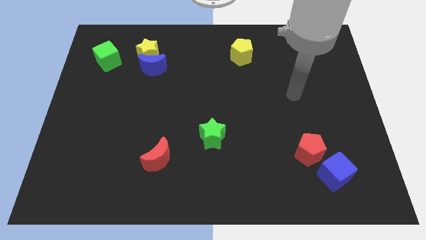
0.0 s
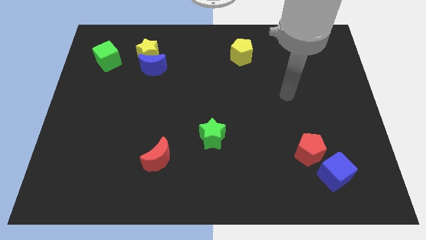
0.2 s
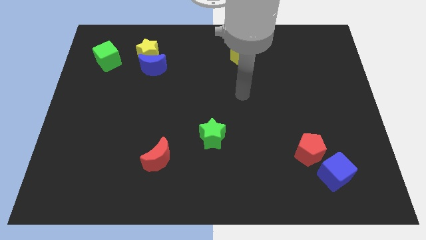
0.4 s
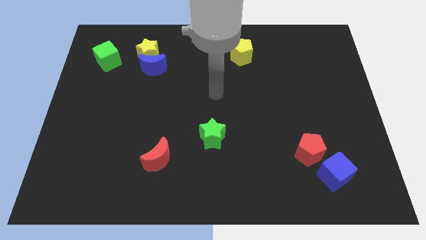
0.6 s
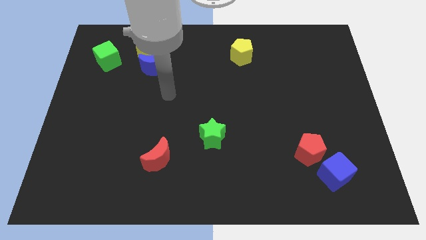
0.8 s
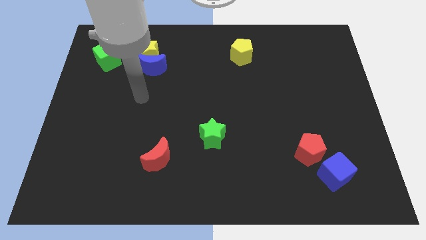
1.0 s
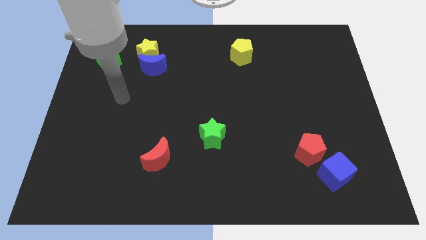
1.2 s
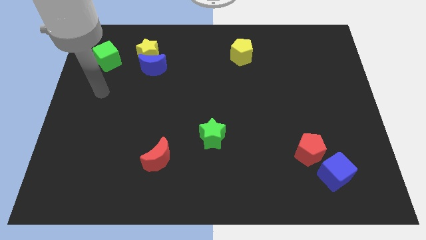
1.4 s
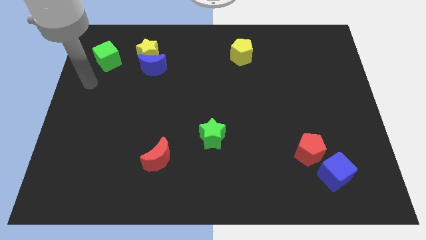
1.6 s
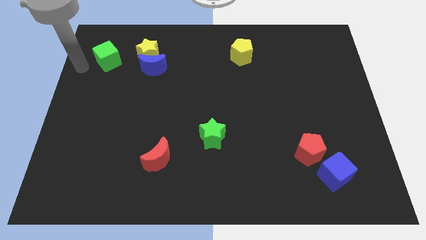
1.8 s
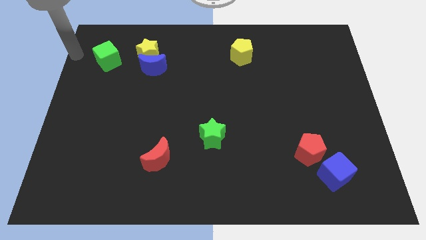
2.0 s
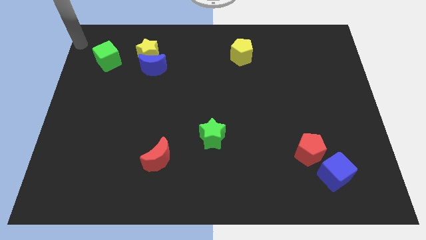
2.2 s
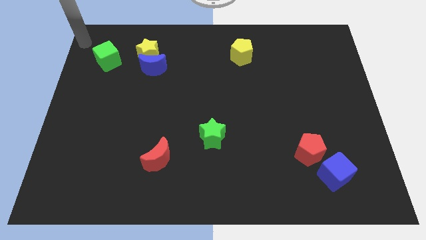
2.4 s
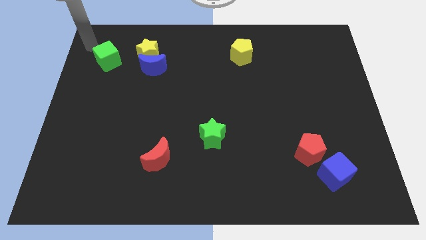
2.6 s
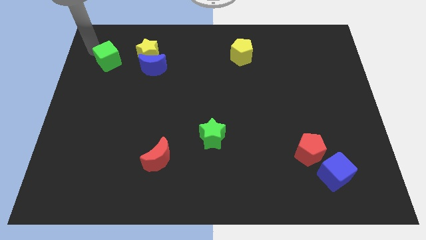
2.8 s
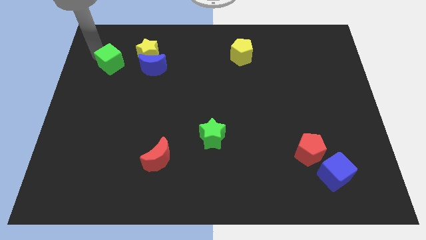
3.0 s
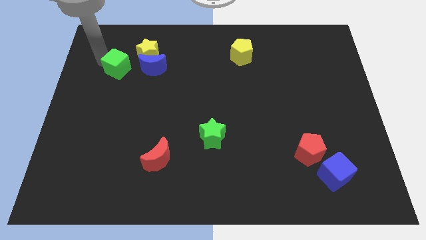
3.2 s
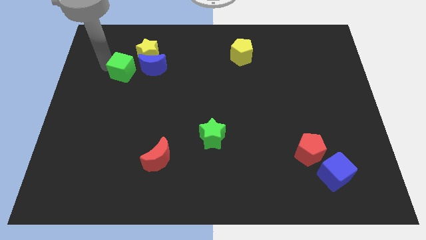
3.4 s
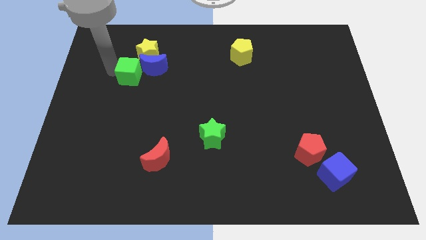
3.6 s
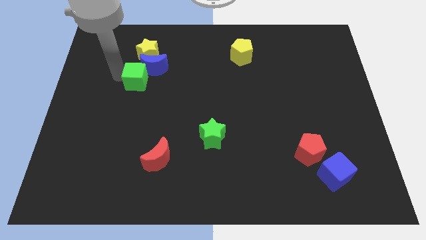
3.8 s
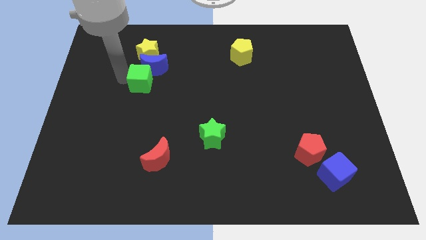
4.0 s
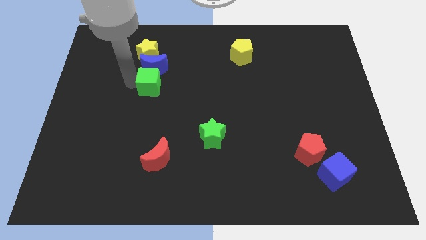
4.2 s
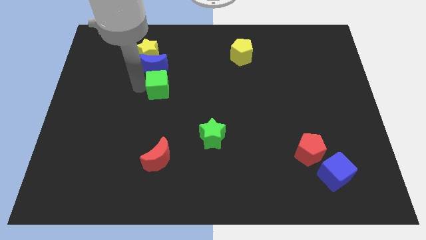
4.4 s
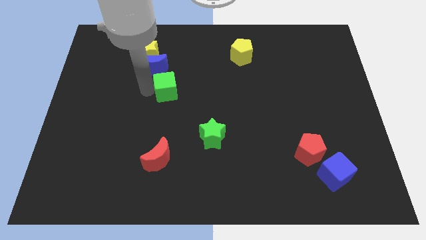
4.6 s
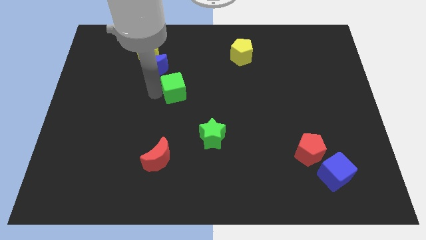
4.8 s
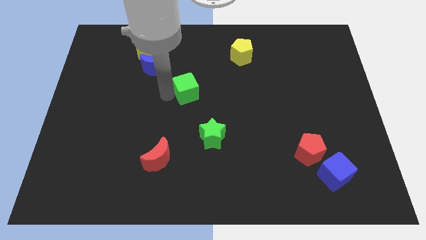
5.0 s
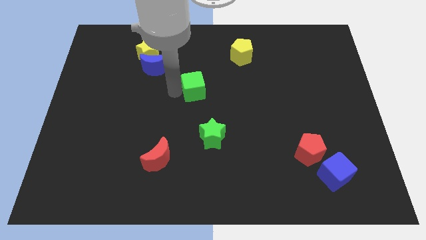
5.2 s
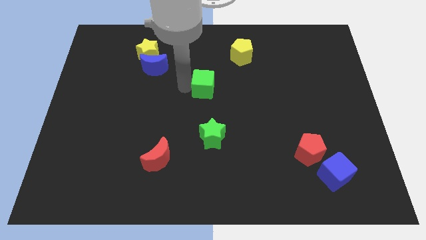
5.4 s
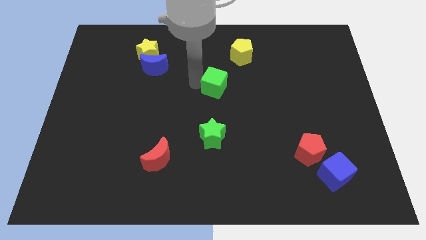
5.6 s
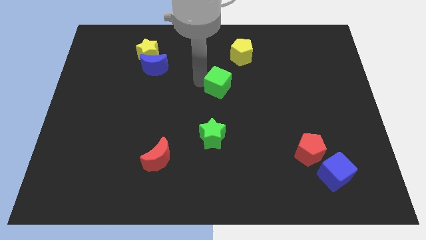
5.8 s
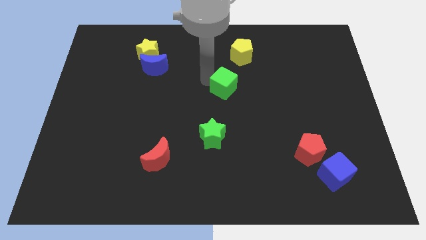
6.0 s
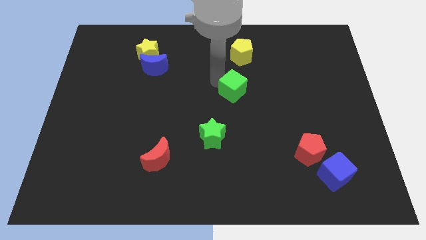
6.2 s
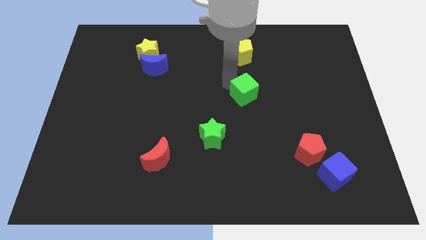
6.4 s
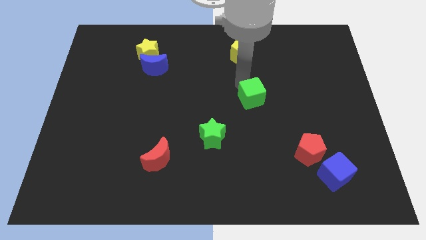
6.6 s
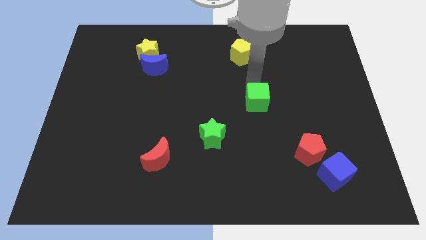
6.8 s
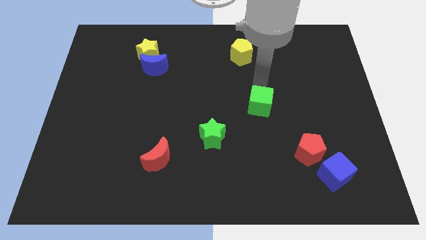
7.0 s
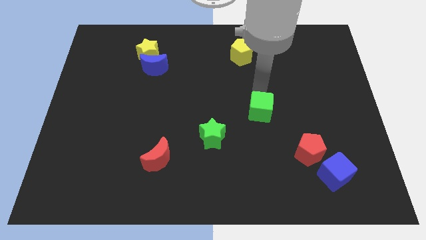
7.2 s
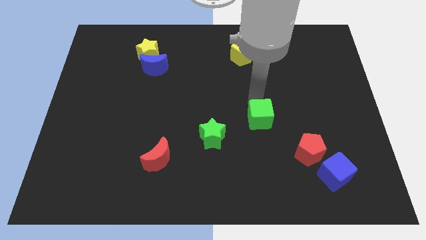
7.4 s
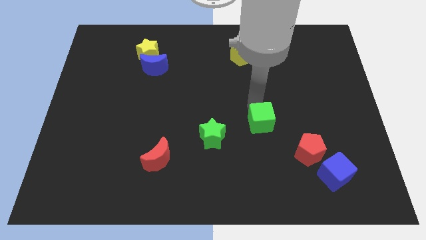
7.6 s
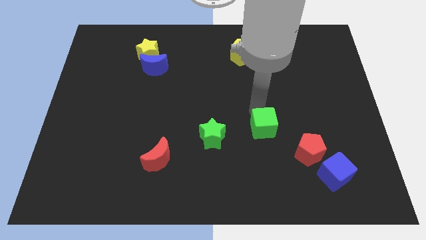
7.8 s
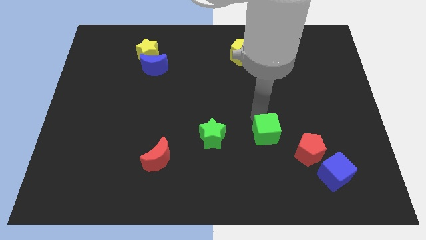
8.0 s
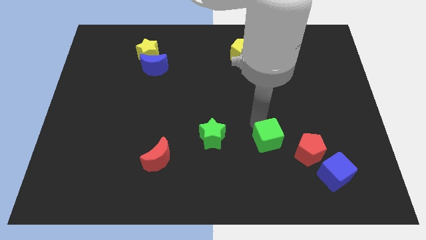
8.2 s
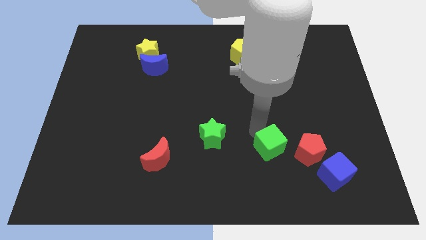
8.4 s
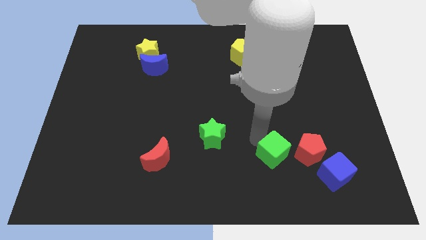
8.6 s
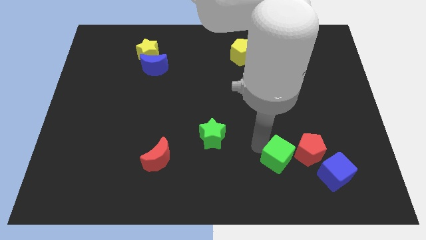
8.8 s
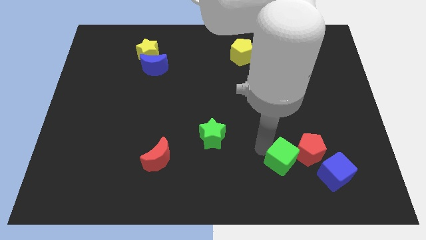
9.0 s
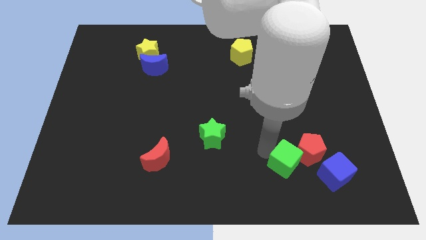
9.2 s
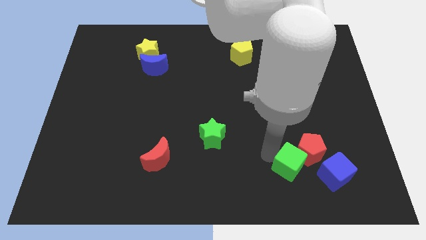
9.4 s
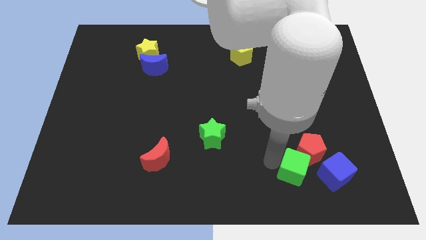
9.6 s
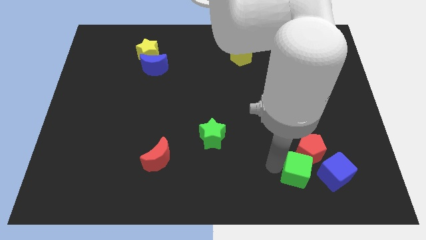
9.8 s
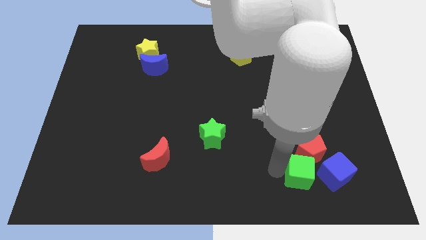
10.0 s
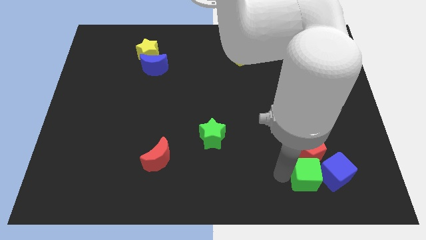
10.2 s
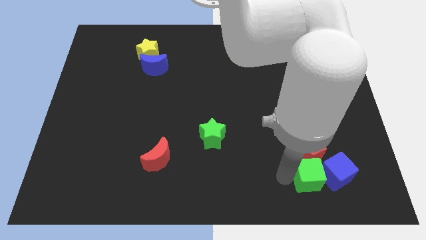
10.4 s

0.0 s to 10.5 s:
put the green cube to the blue cube

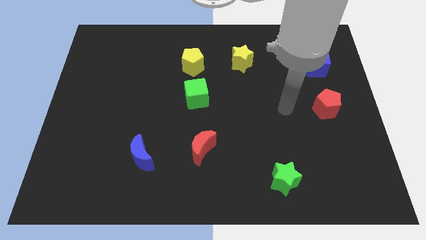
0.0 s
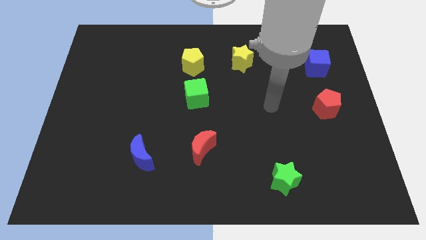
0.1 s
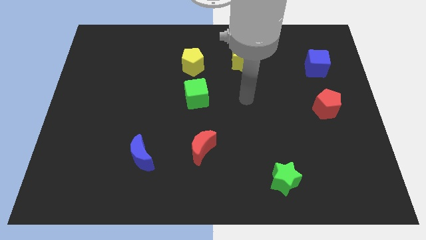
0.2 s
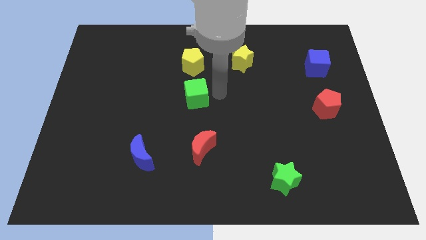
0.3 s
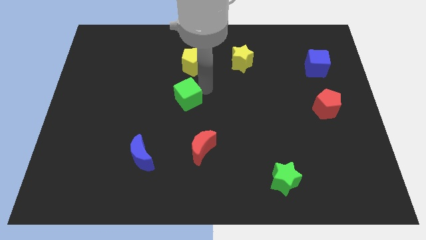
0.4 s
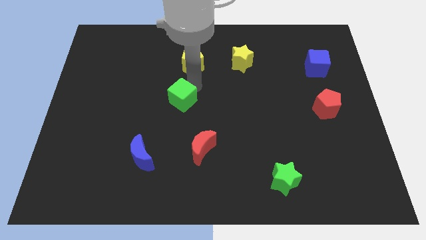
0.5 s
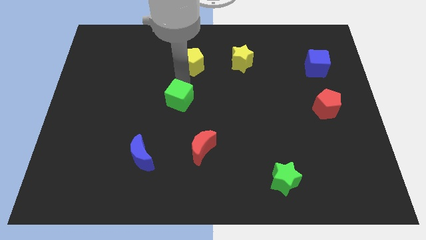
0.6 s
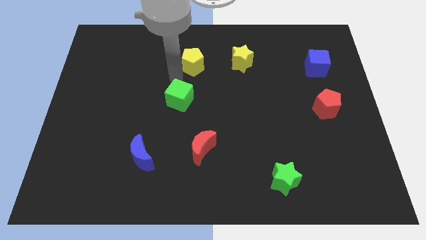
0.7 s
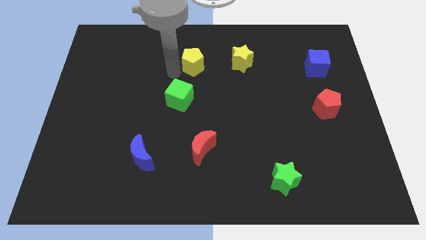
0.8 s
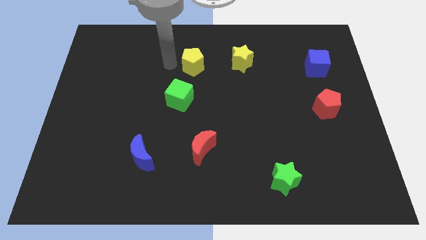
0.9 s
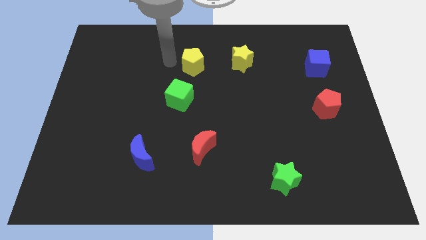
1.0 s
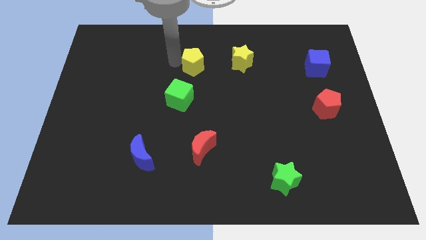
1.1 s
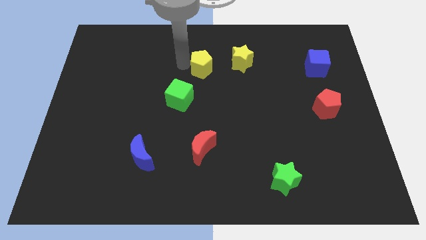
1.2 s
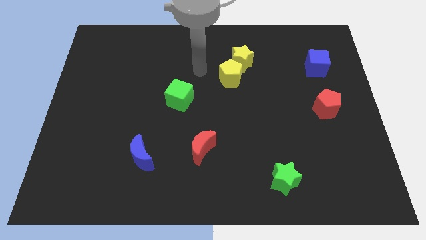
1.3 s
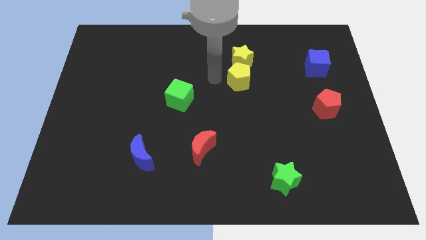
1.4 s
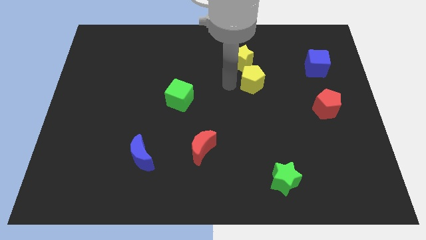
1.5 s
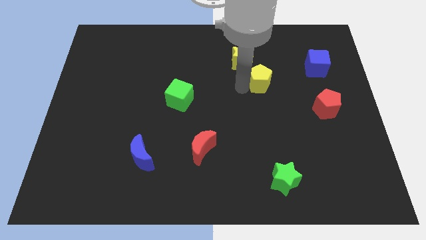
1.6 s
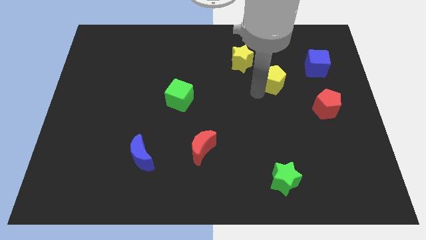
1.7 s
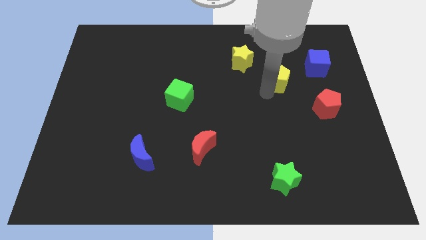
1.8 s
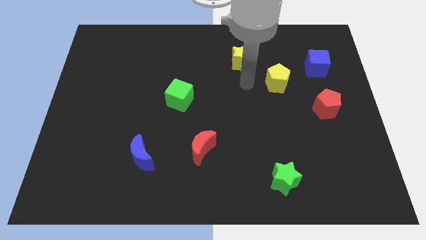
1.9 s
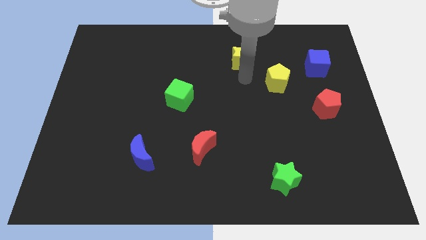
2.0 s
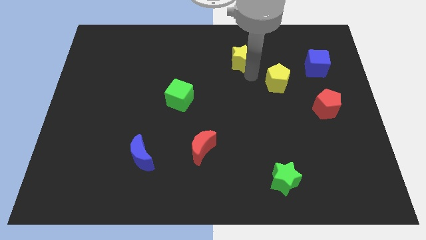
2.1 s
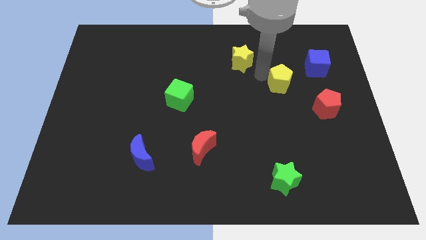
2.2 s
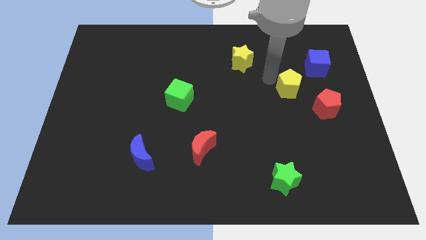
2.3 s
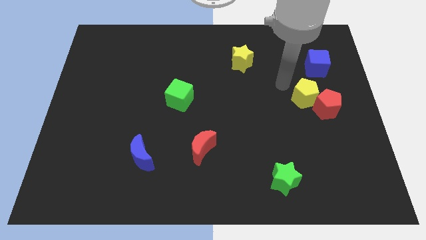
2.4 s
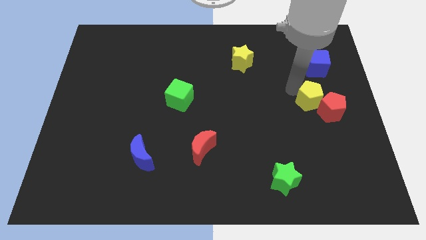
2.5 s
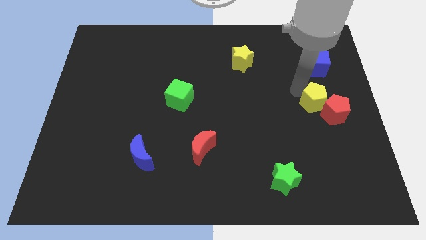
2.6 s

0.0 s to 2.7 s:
push the yellow pentagon close to the red pentagon

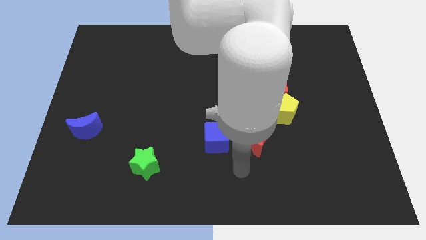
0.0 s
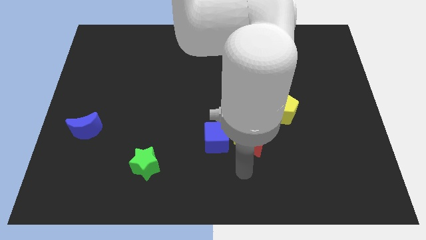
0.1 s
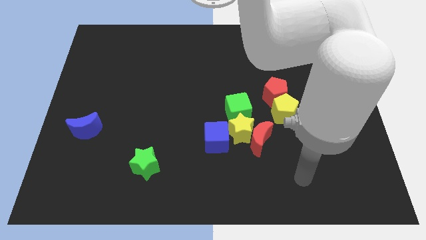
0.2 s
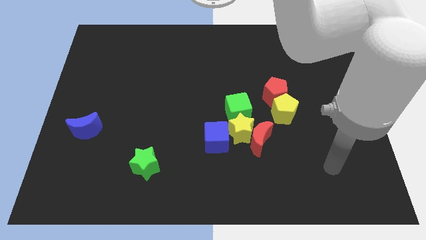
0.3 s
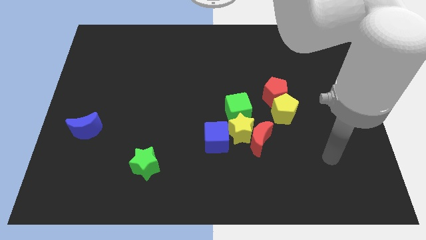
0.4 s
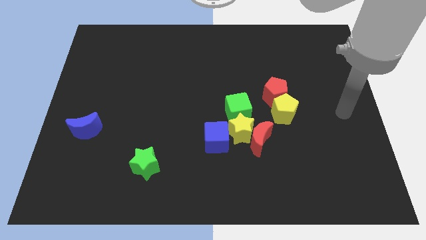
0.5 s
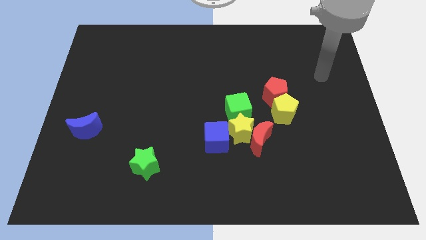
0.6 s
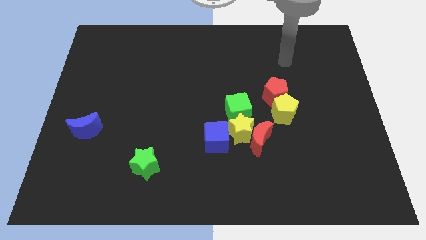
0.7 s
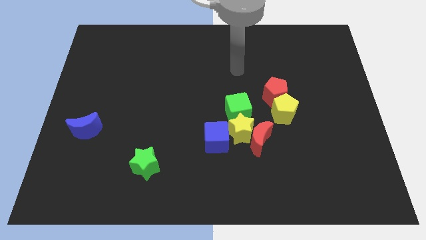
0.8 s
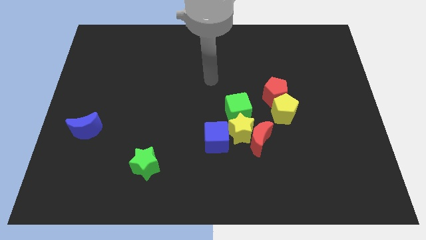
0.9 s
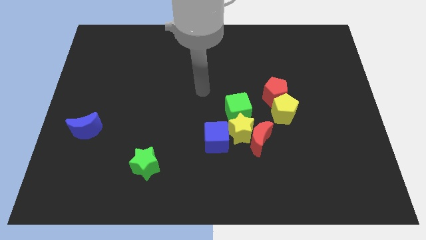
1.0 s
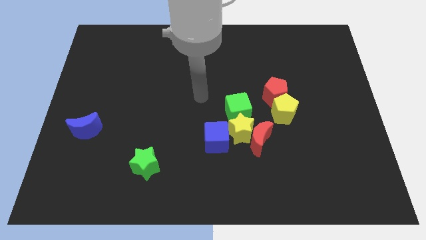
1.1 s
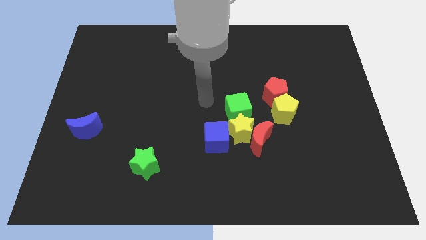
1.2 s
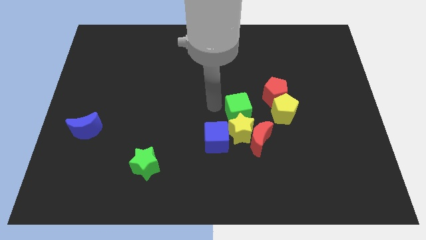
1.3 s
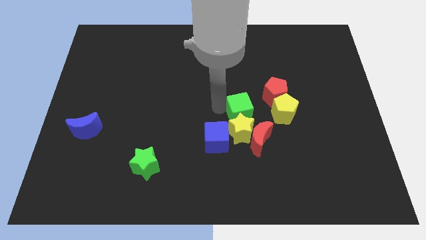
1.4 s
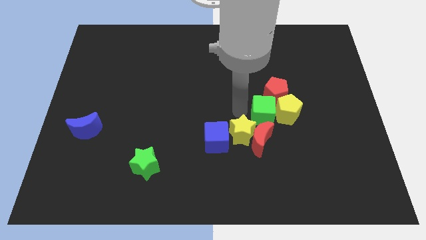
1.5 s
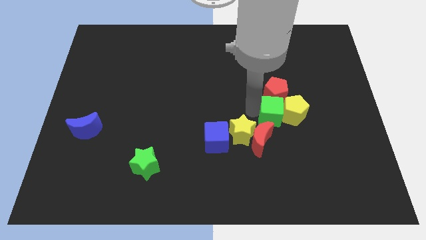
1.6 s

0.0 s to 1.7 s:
push the green cube towards the yellow pentagon
